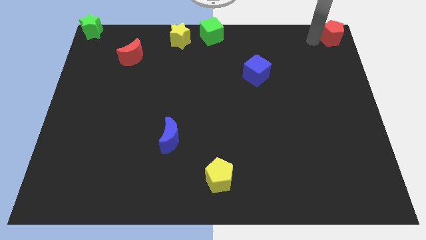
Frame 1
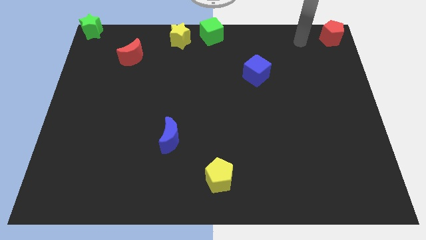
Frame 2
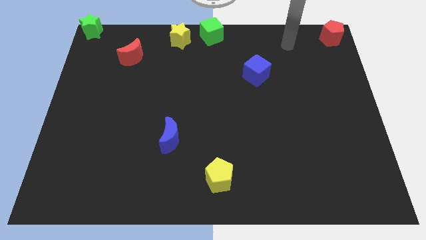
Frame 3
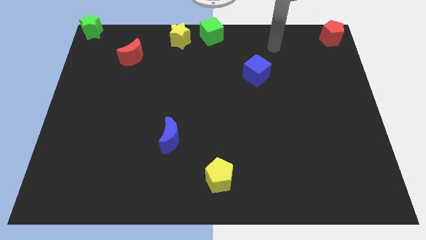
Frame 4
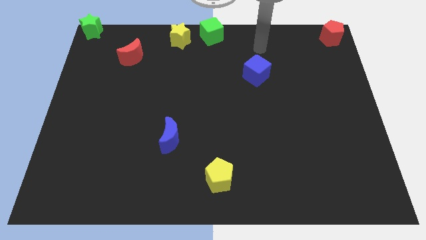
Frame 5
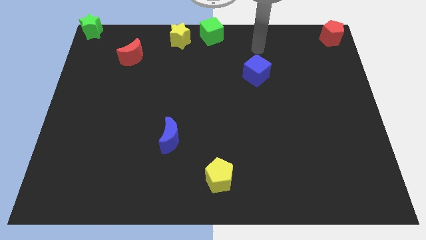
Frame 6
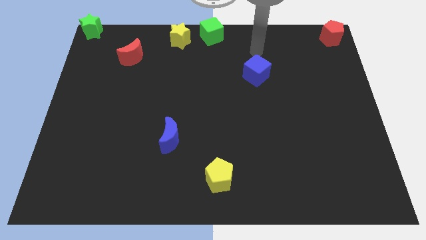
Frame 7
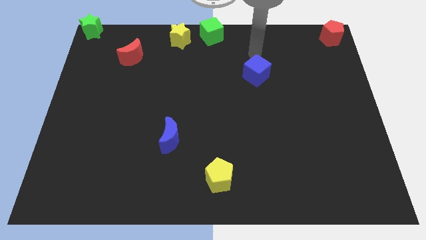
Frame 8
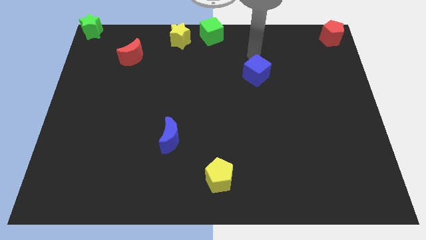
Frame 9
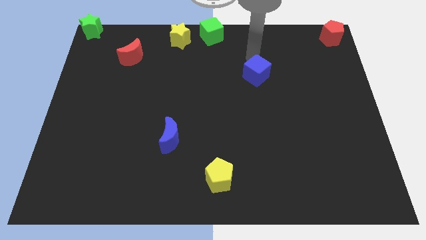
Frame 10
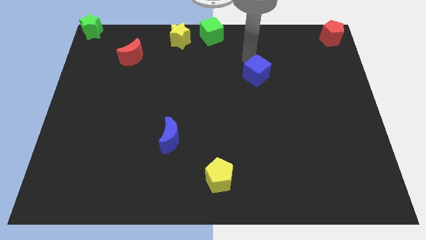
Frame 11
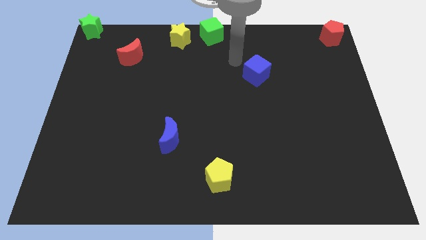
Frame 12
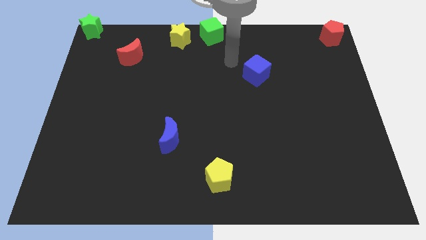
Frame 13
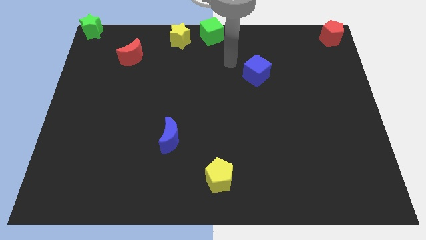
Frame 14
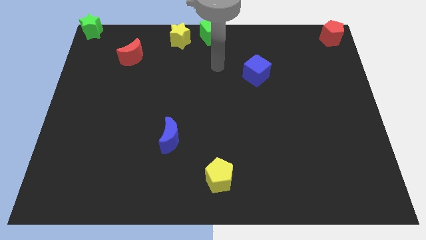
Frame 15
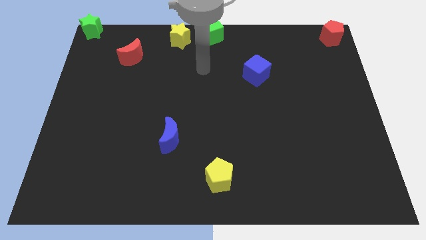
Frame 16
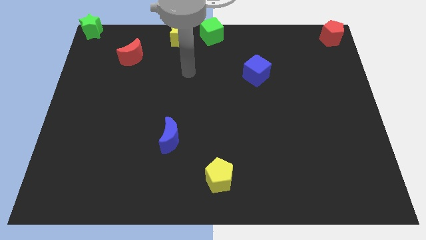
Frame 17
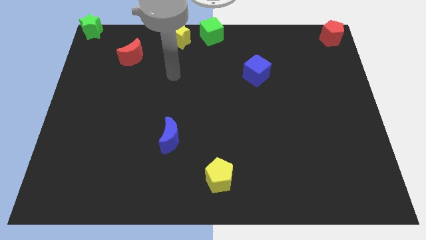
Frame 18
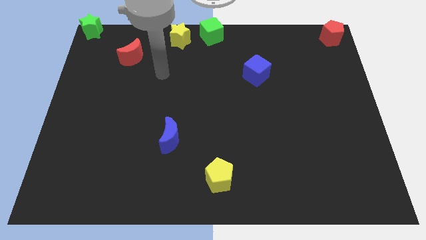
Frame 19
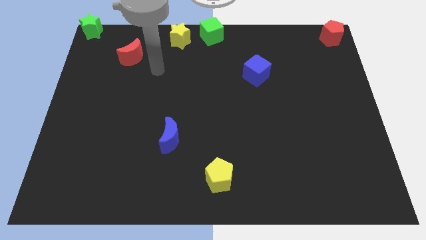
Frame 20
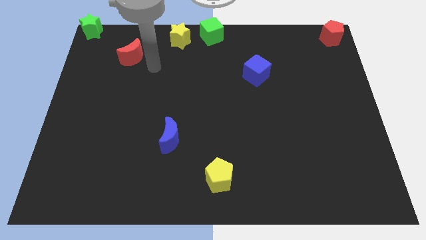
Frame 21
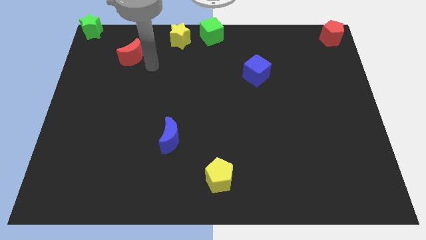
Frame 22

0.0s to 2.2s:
move your arm close to the red moon

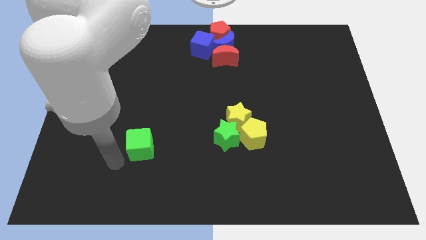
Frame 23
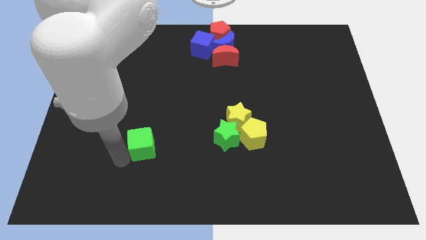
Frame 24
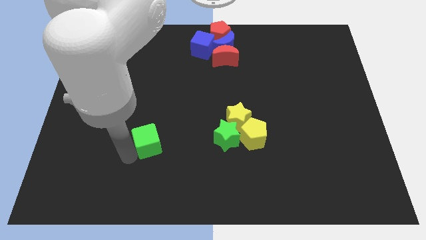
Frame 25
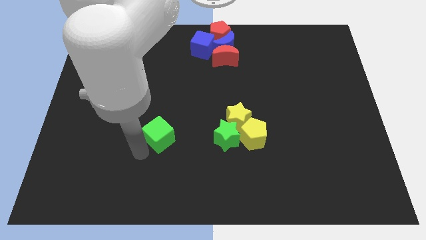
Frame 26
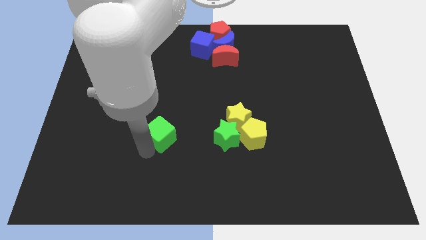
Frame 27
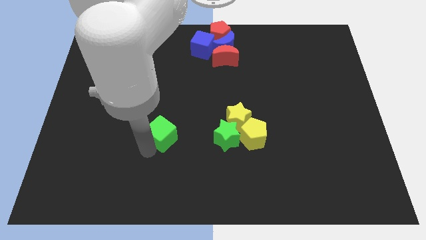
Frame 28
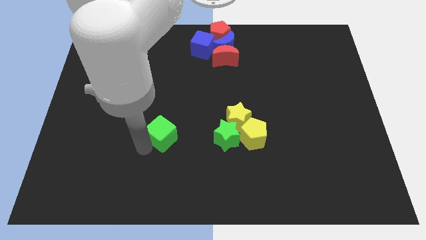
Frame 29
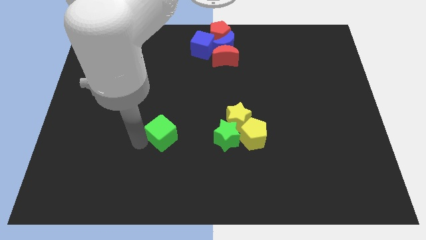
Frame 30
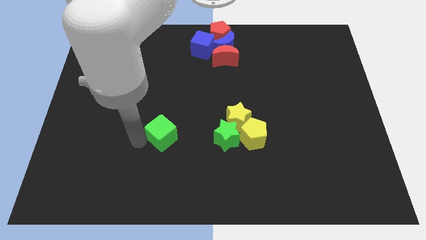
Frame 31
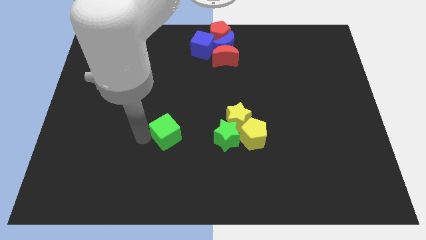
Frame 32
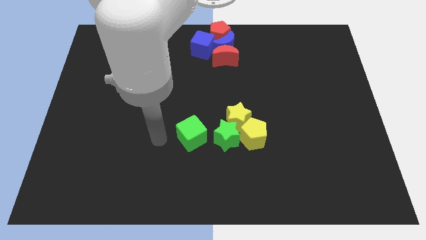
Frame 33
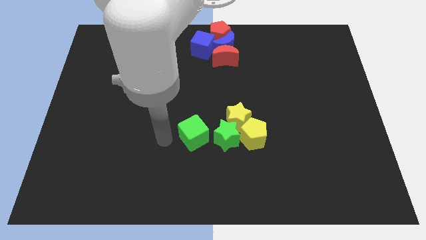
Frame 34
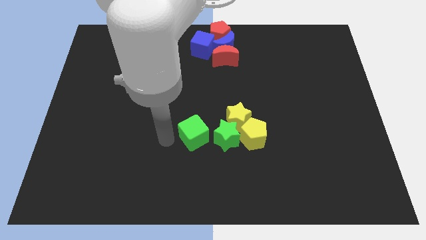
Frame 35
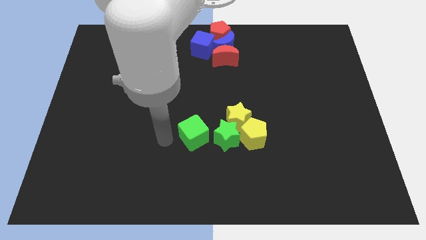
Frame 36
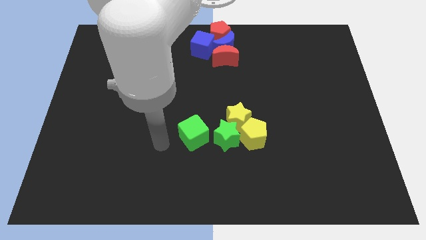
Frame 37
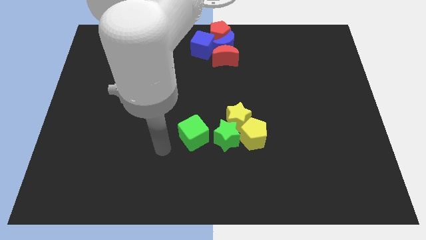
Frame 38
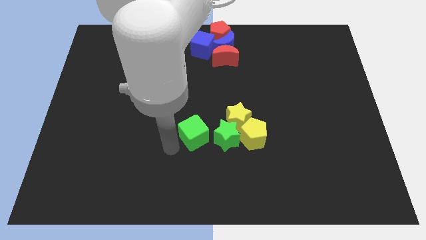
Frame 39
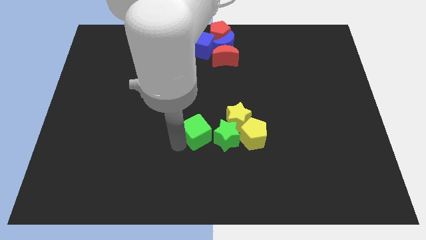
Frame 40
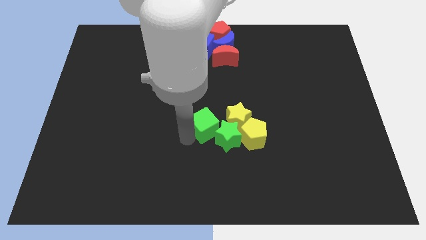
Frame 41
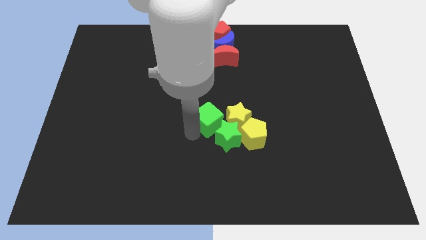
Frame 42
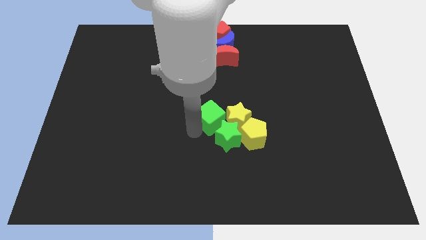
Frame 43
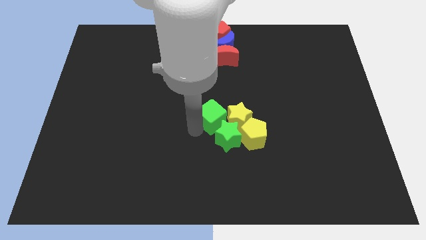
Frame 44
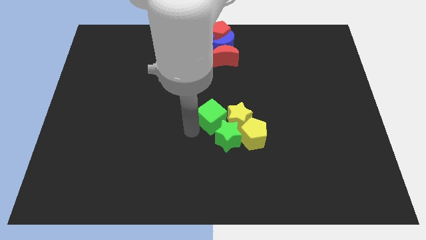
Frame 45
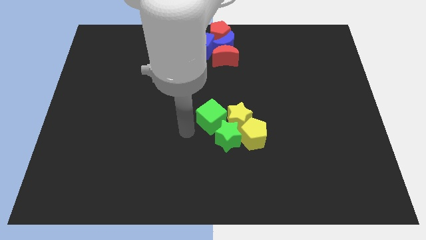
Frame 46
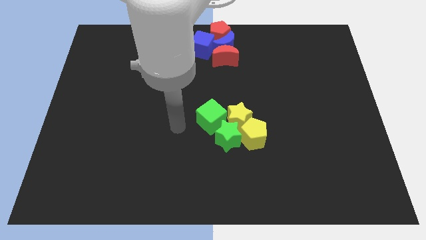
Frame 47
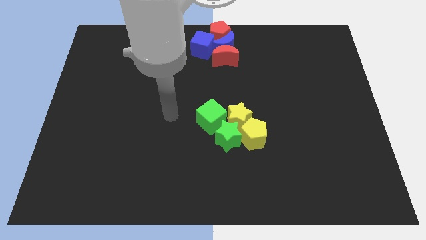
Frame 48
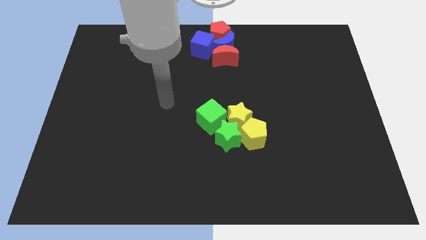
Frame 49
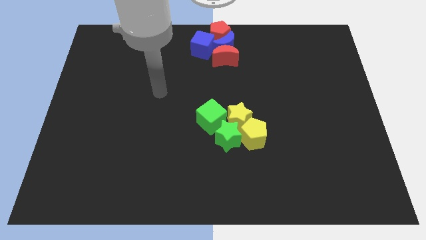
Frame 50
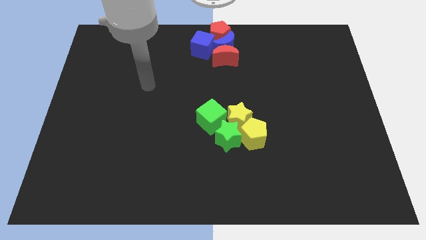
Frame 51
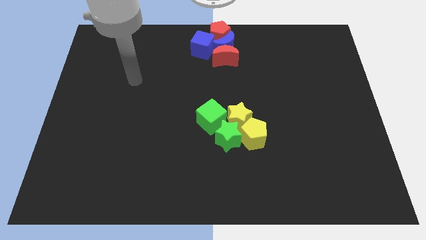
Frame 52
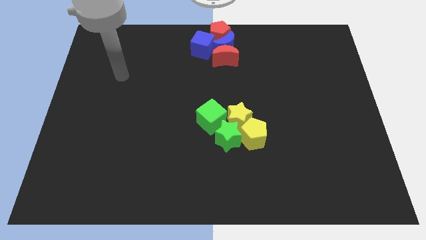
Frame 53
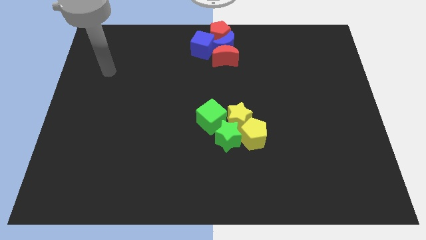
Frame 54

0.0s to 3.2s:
move your arm away from the green cube

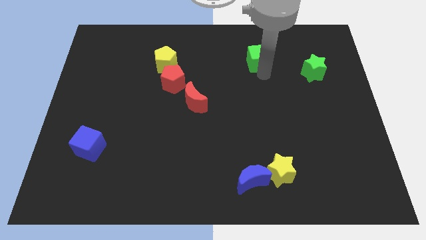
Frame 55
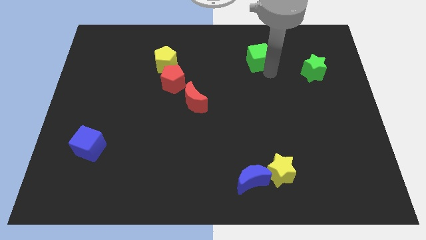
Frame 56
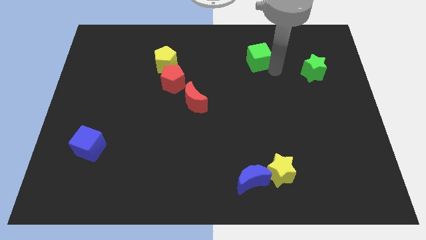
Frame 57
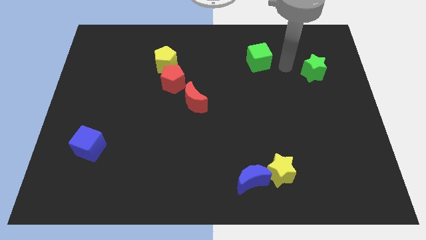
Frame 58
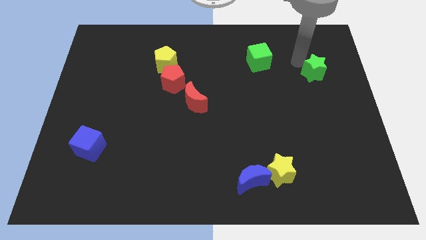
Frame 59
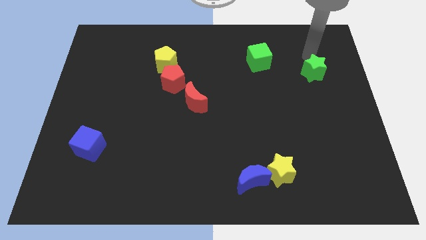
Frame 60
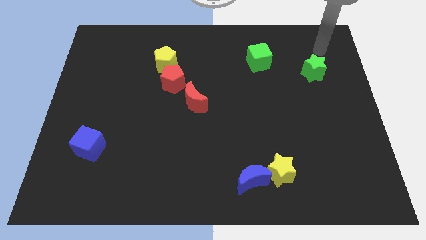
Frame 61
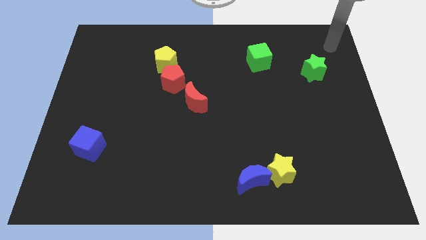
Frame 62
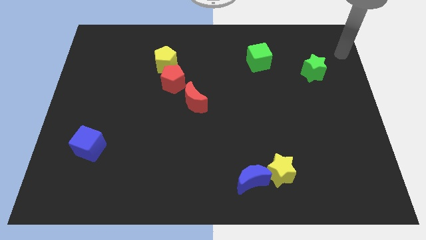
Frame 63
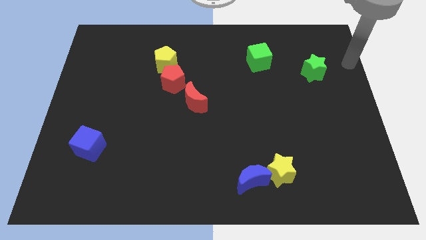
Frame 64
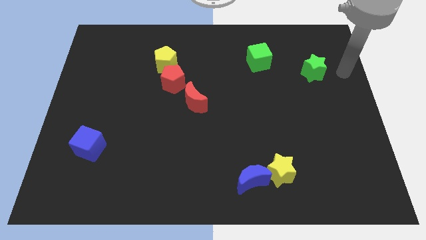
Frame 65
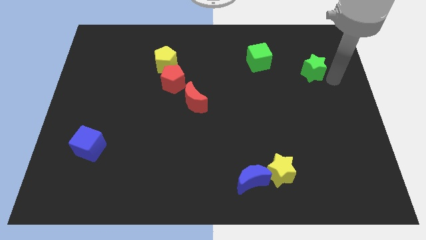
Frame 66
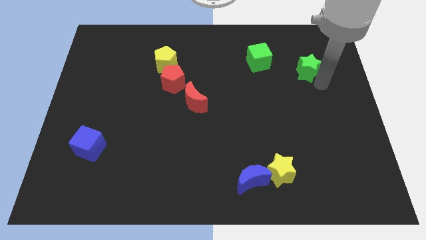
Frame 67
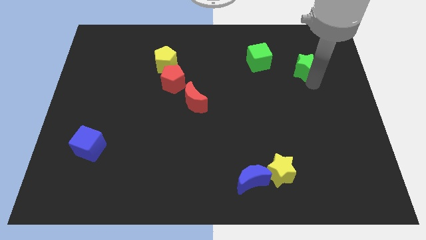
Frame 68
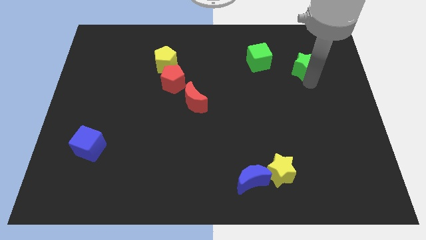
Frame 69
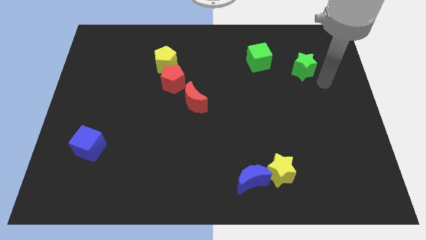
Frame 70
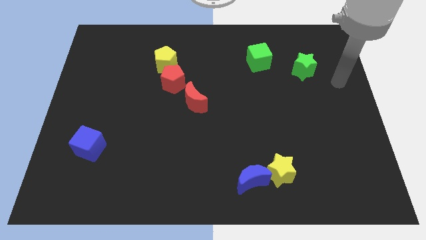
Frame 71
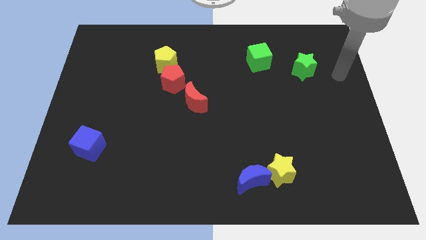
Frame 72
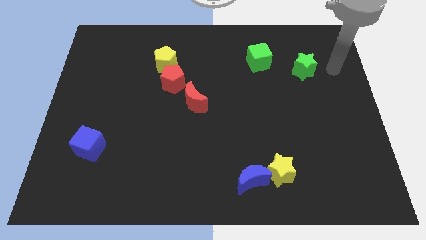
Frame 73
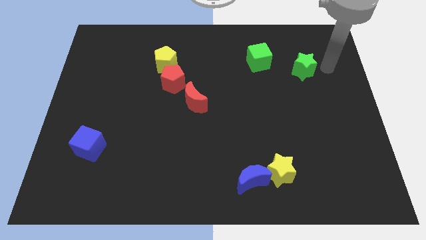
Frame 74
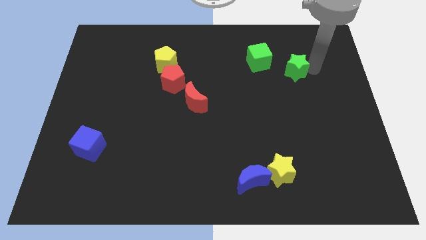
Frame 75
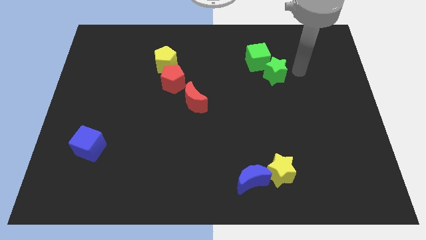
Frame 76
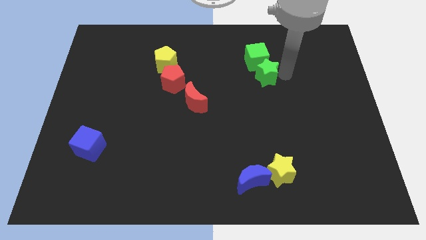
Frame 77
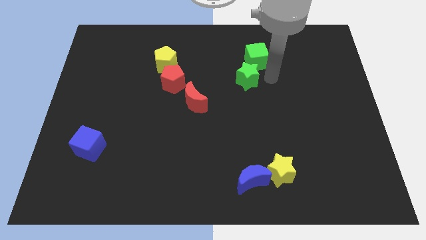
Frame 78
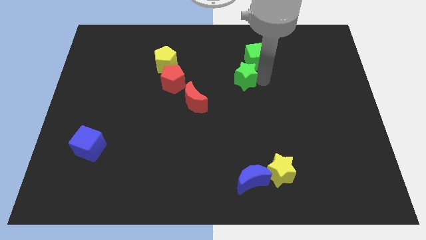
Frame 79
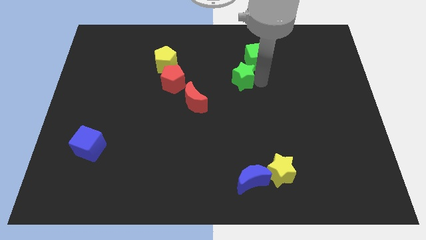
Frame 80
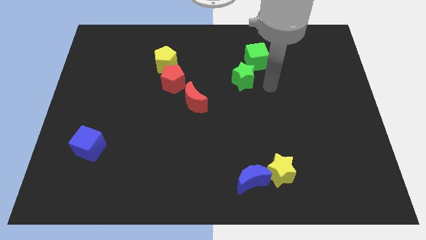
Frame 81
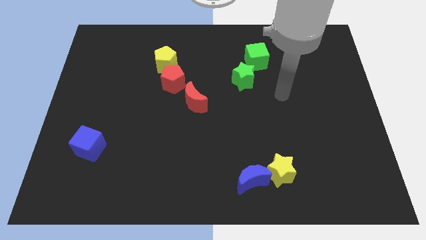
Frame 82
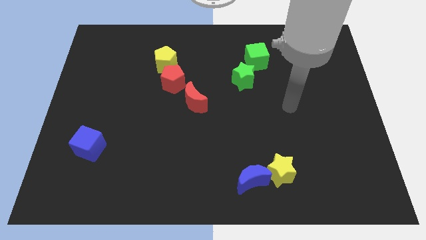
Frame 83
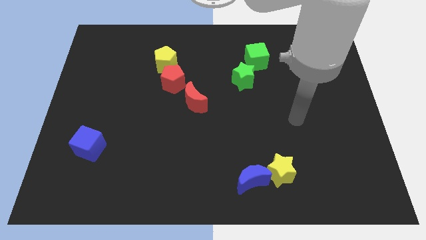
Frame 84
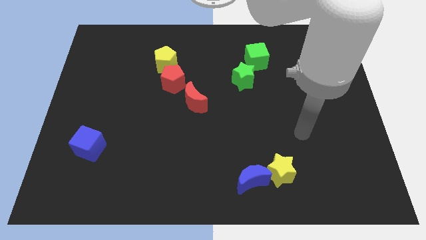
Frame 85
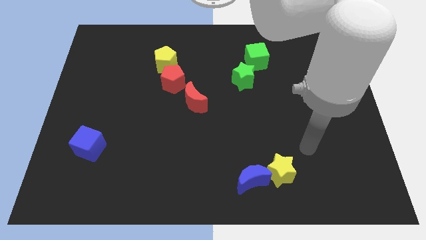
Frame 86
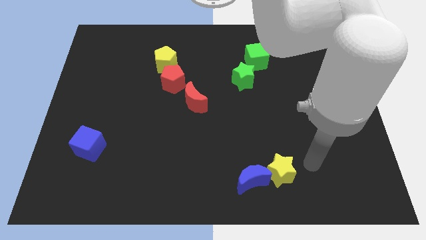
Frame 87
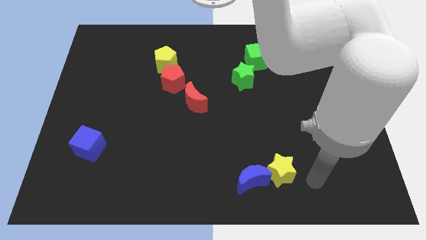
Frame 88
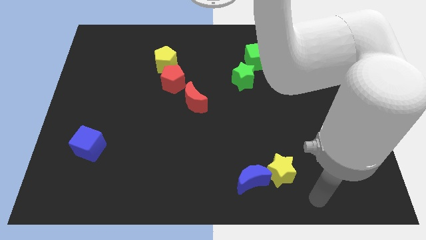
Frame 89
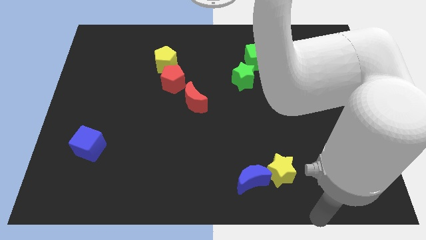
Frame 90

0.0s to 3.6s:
slide the green star to the bottom left of the green cube
